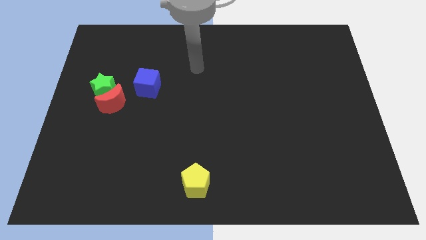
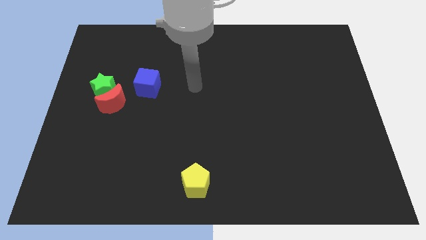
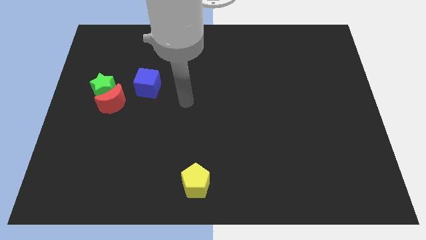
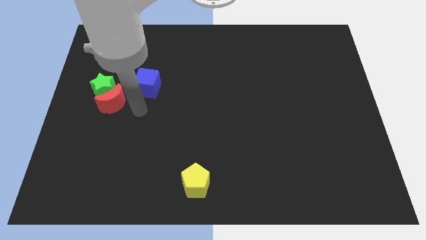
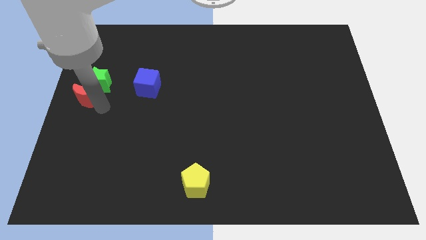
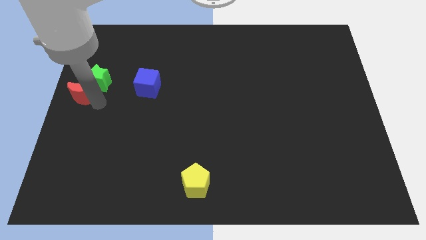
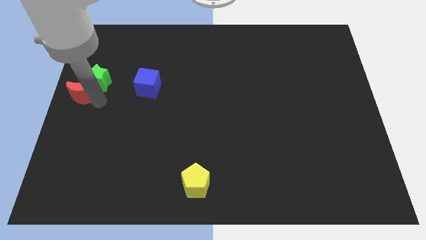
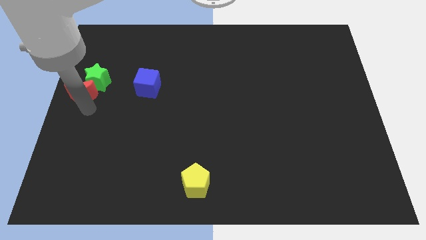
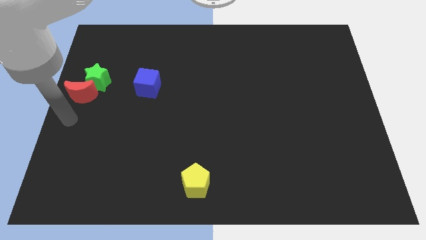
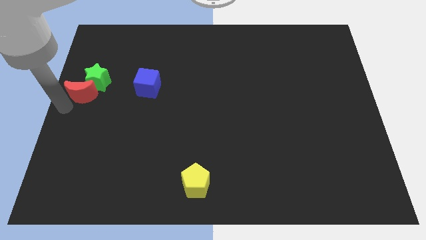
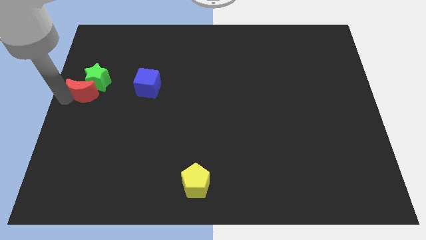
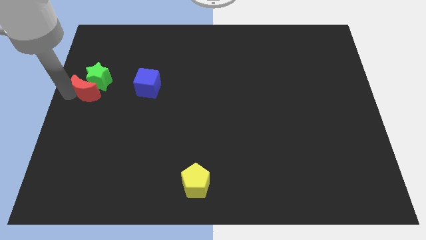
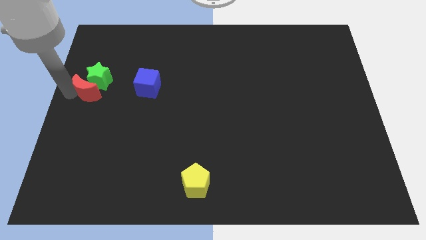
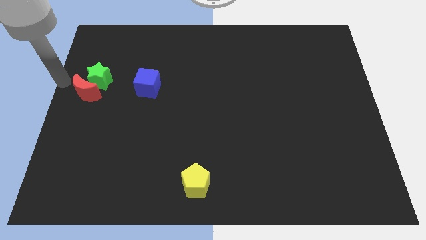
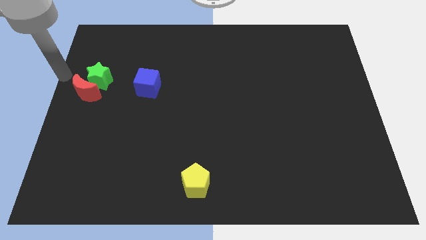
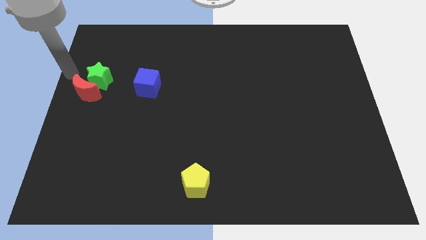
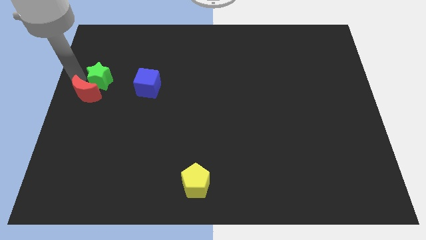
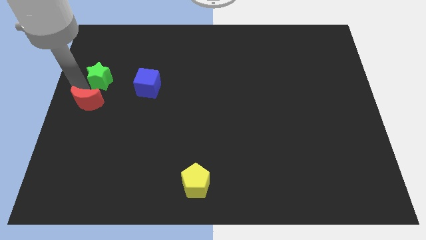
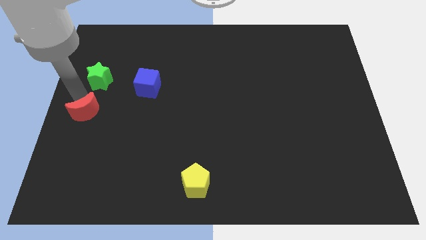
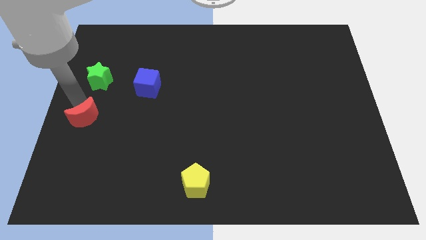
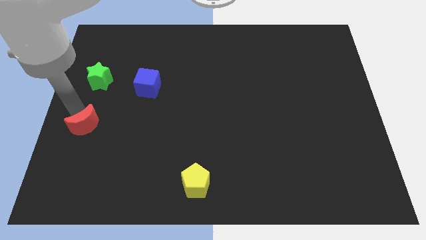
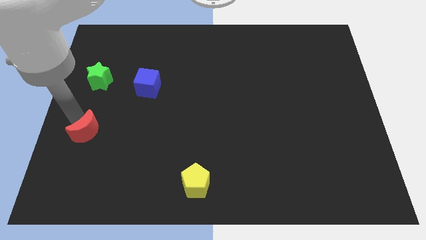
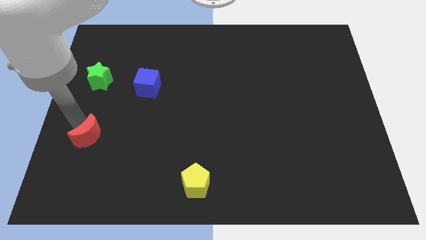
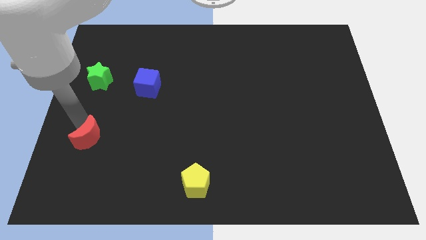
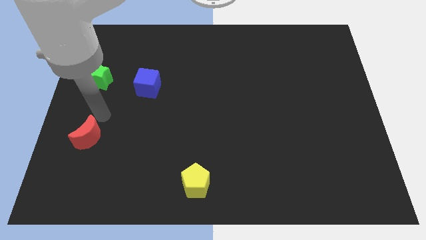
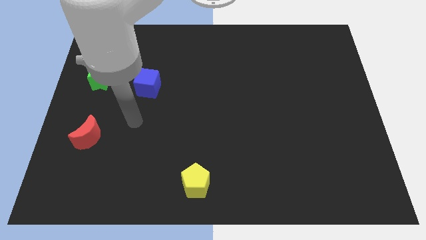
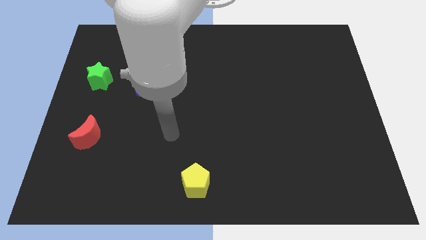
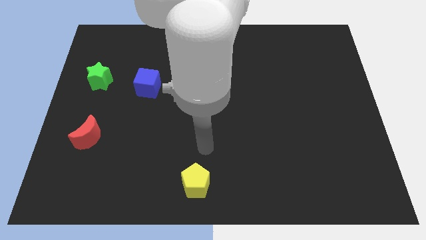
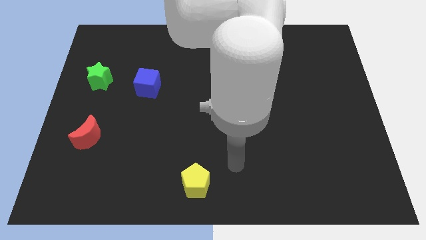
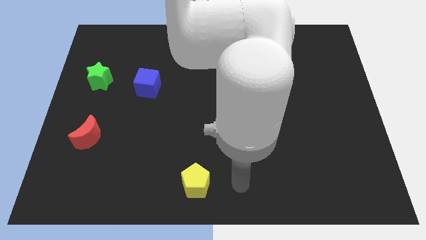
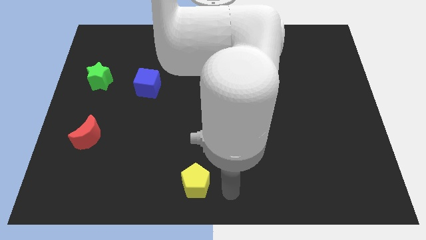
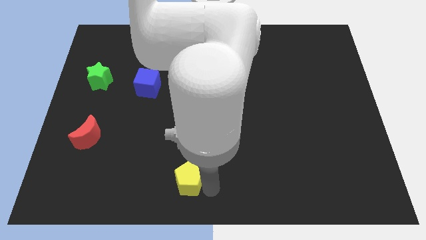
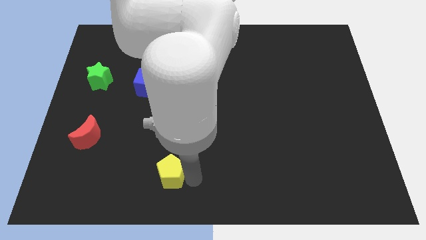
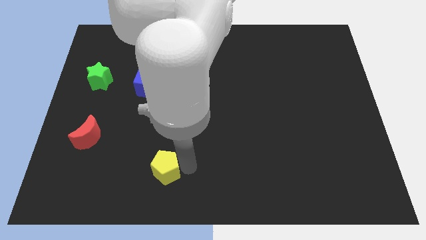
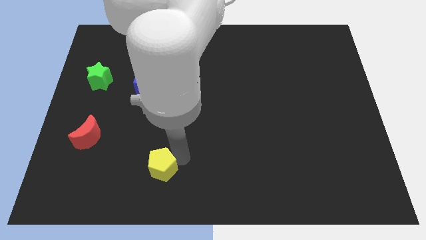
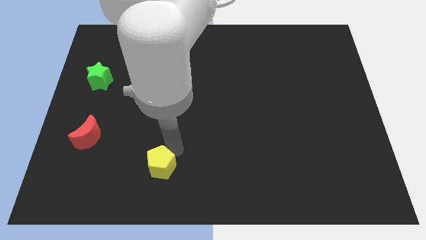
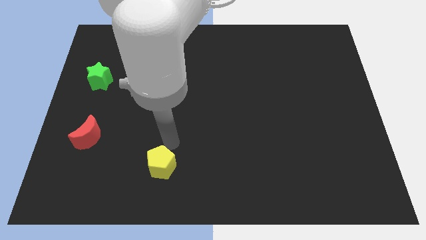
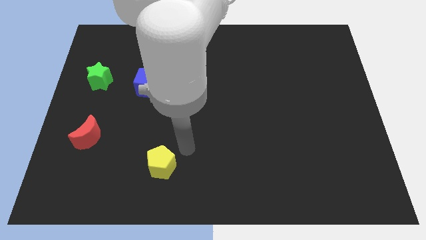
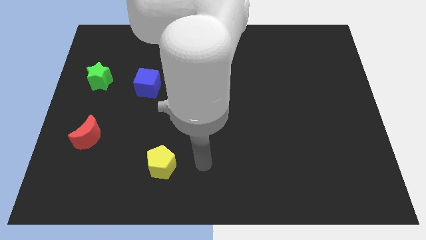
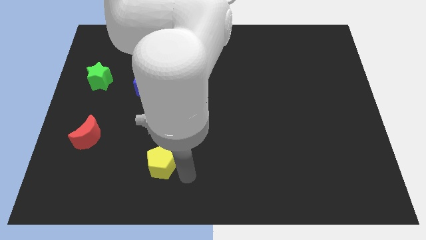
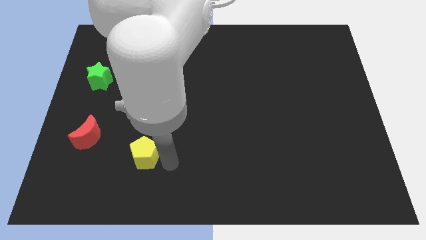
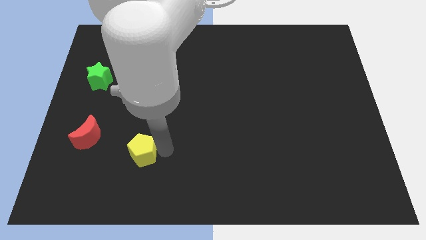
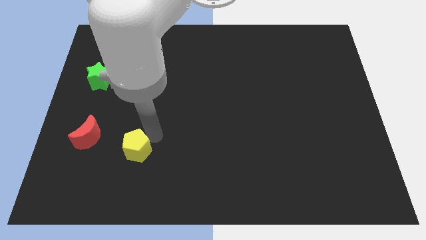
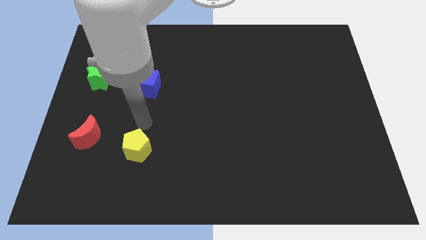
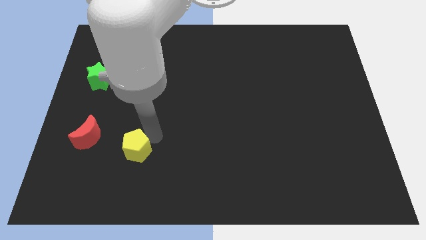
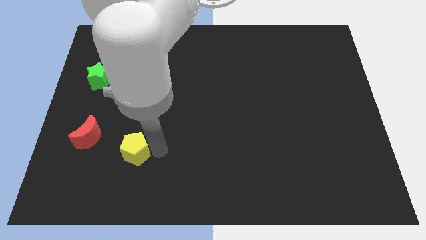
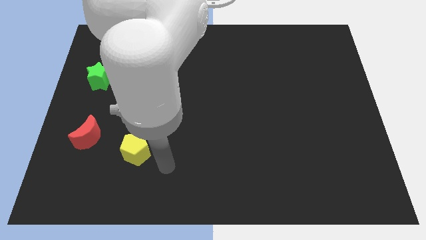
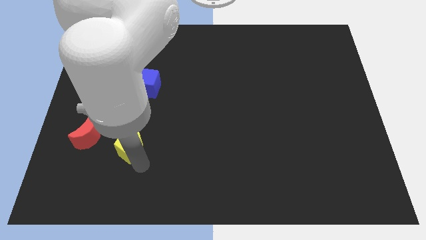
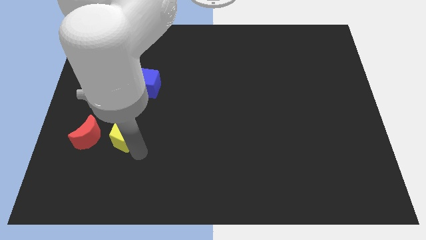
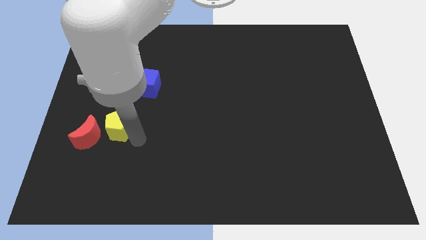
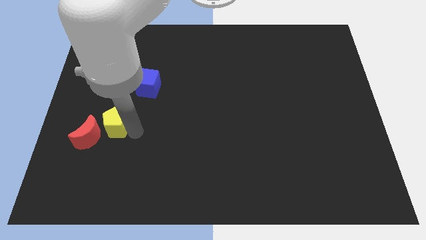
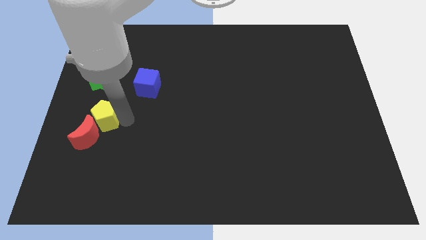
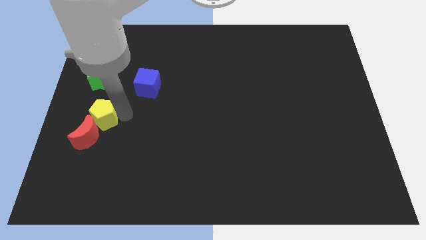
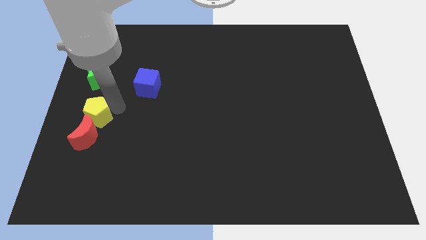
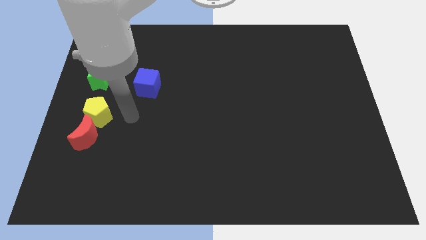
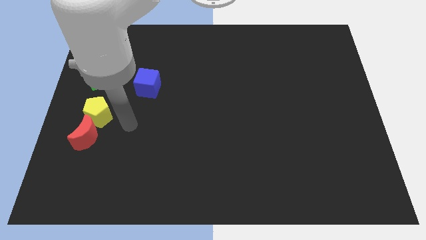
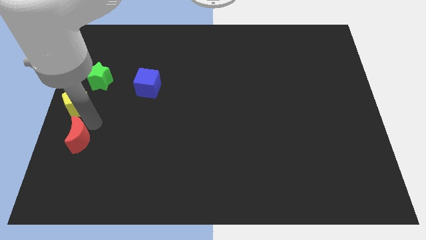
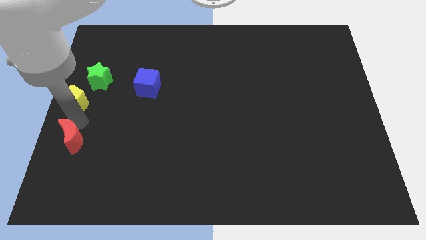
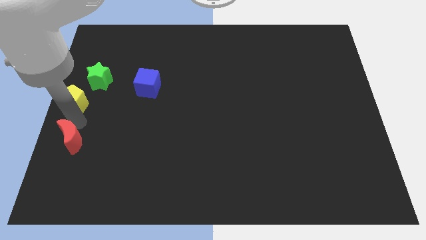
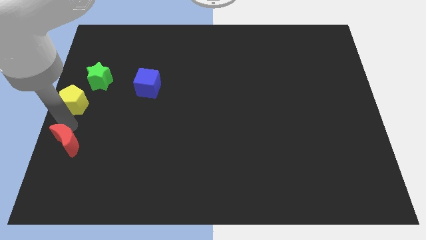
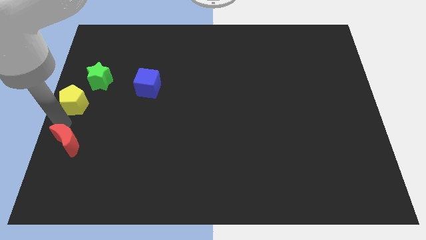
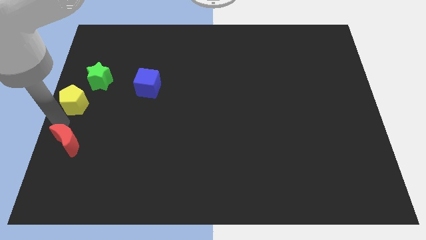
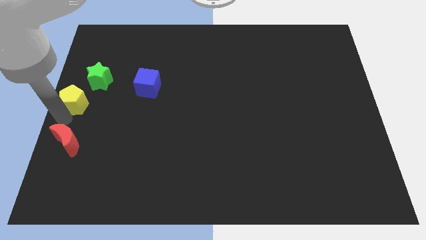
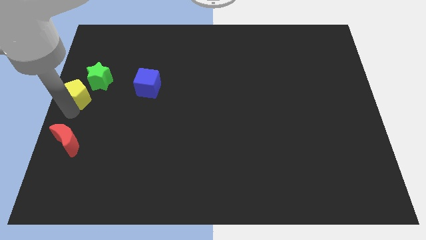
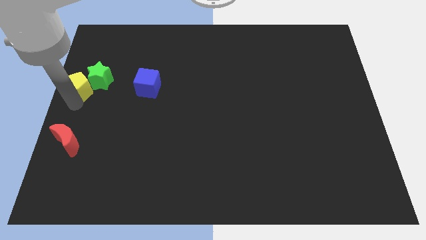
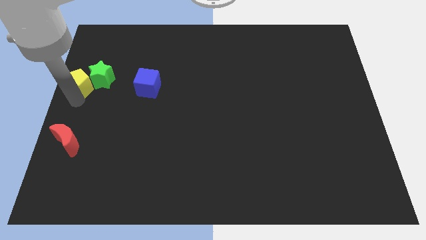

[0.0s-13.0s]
move the pentagon next to the green block

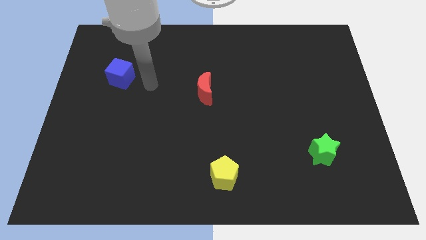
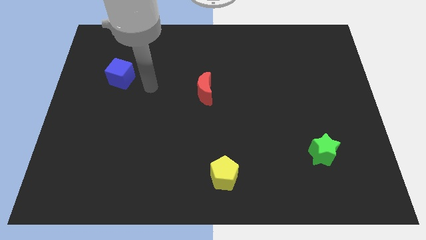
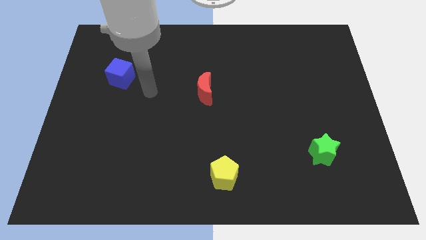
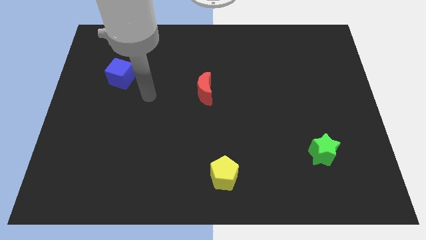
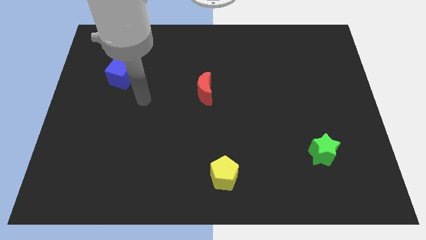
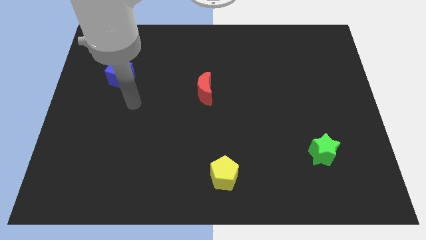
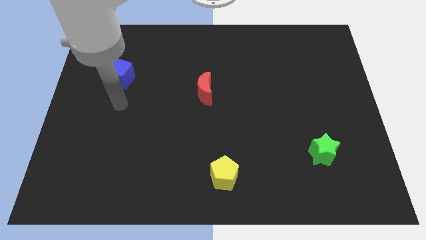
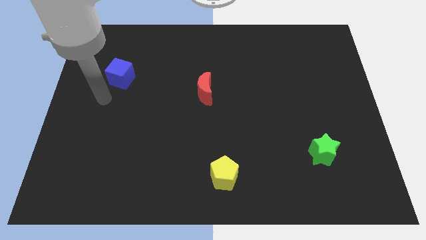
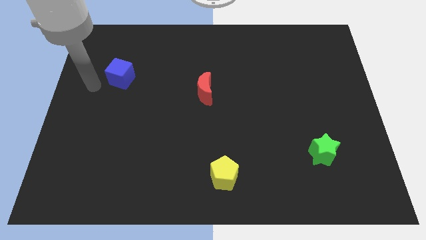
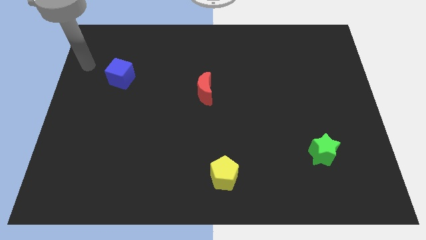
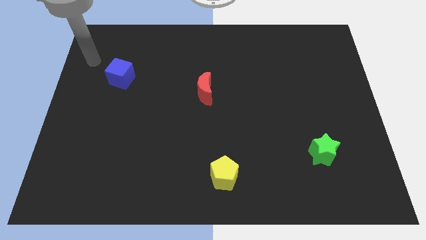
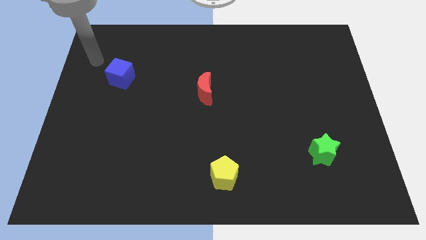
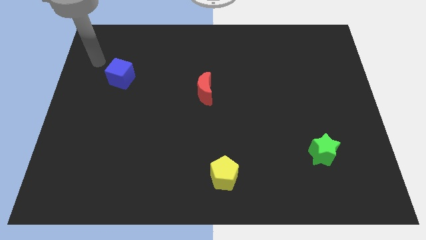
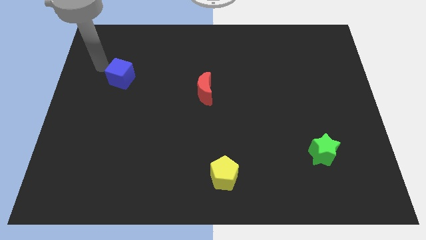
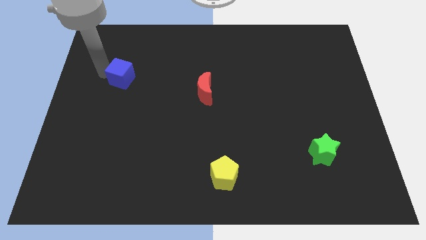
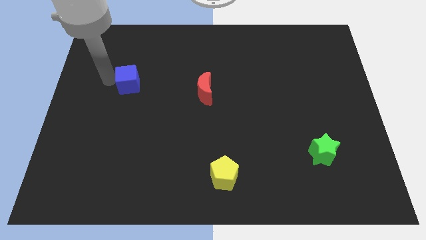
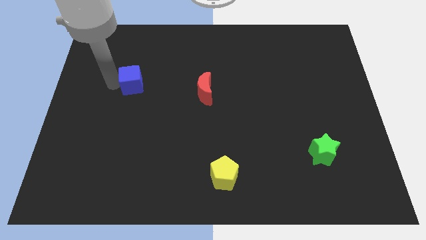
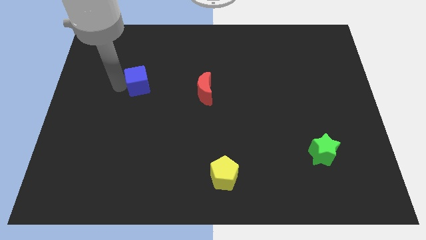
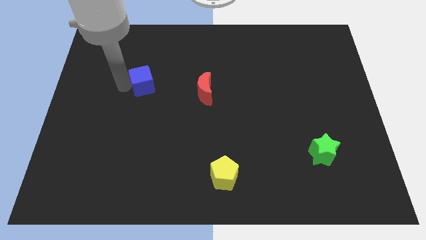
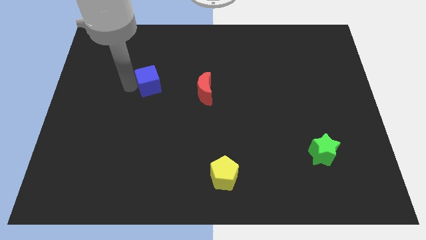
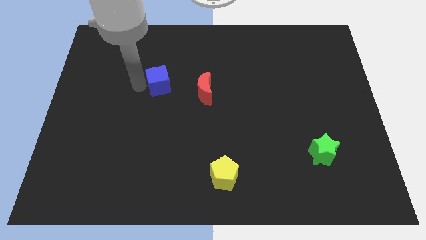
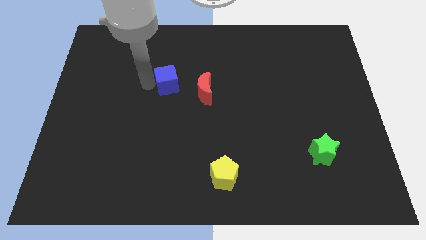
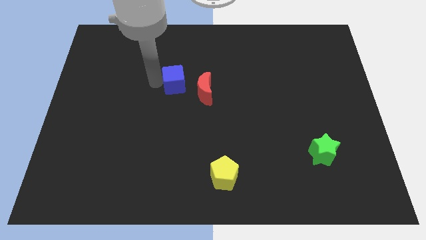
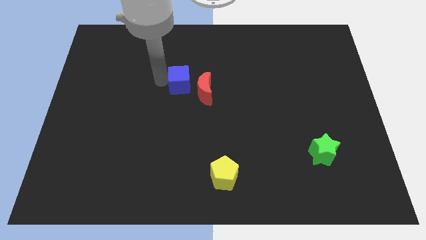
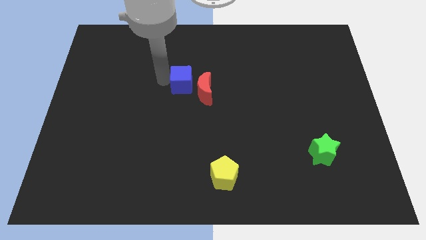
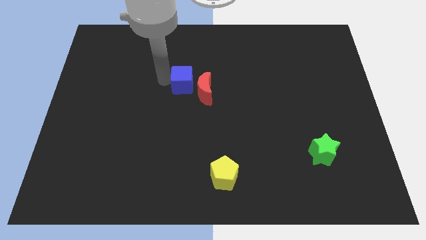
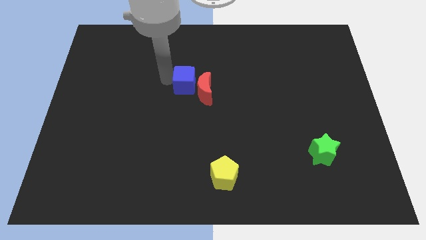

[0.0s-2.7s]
move the cube close to the red block
